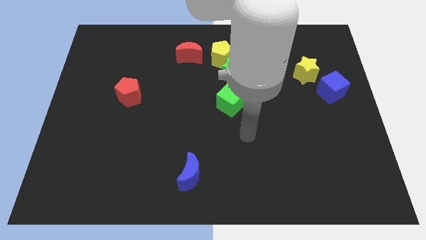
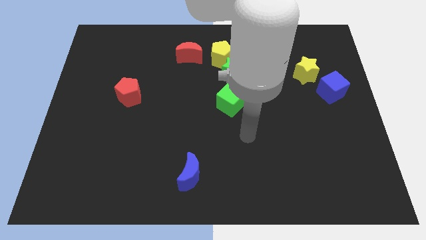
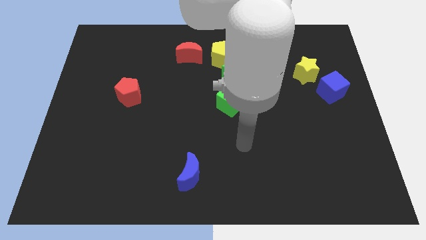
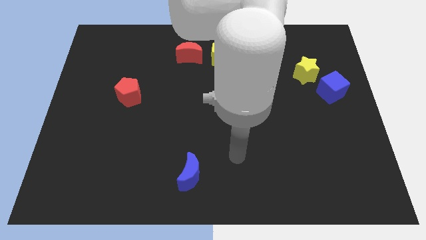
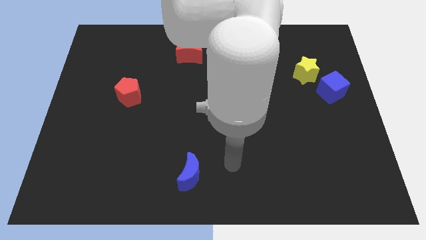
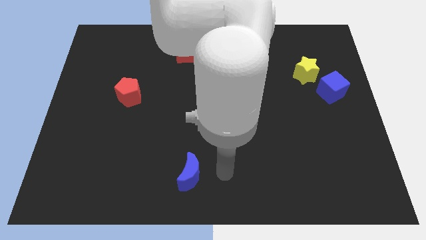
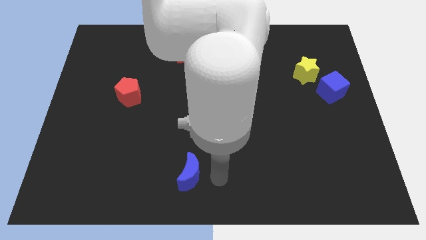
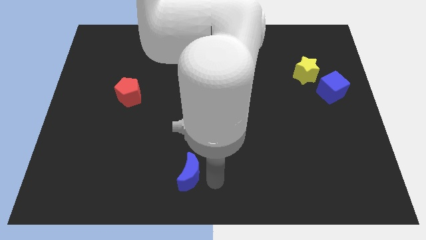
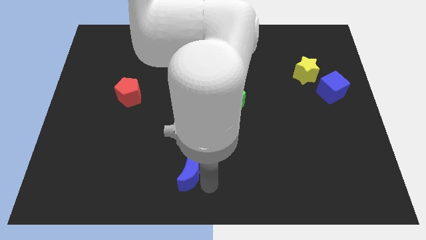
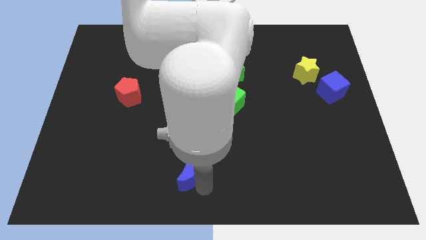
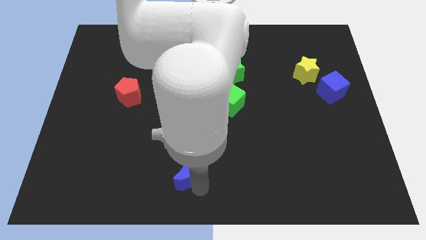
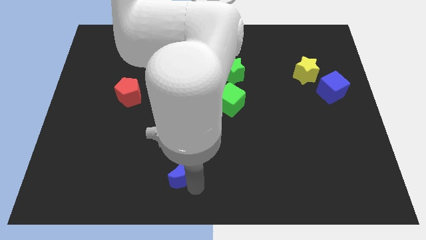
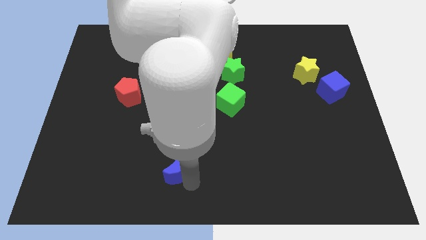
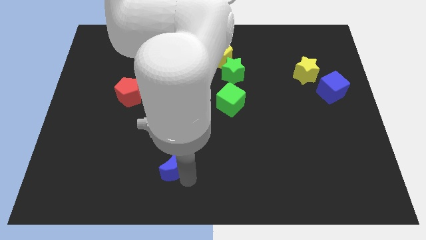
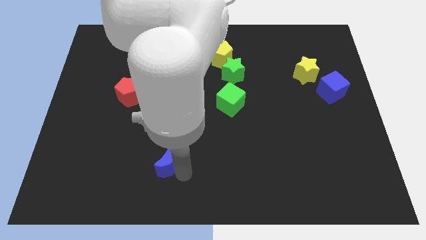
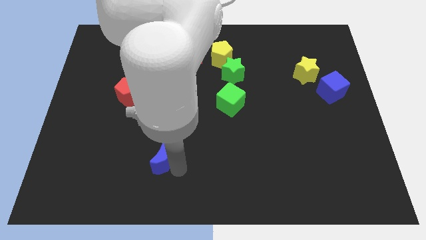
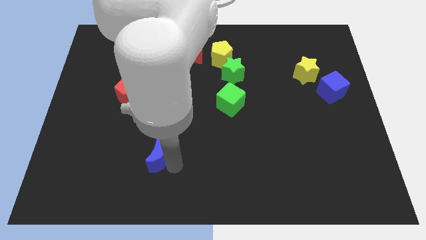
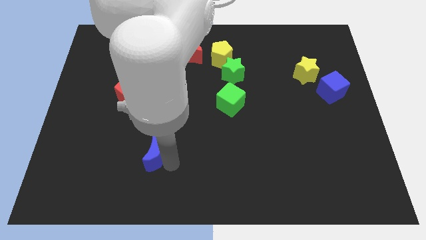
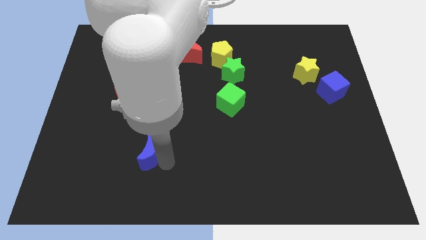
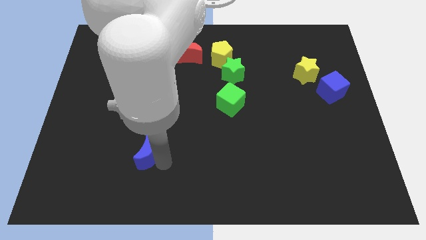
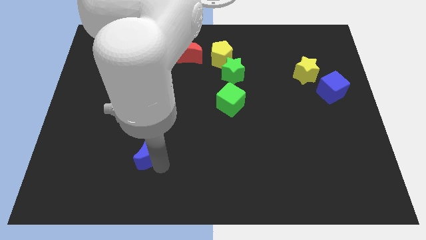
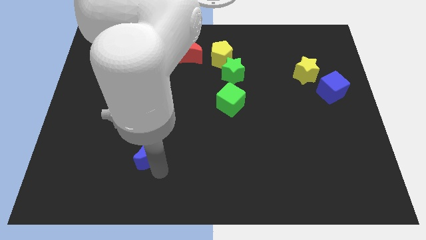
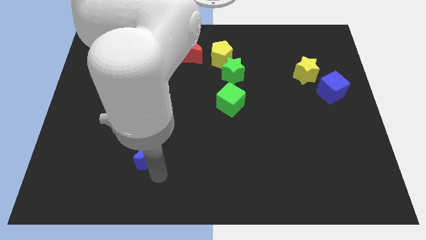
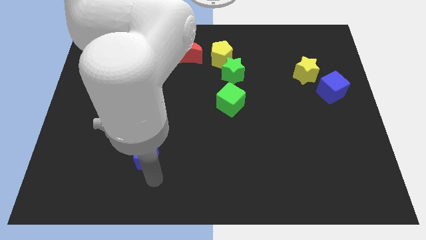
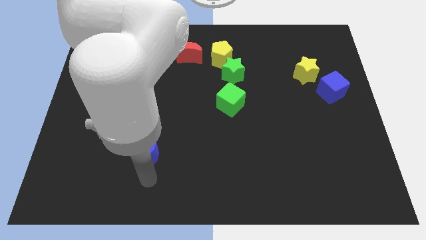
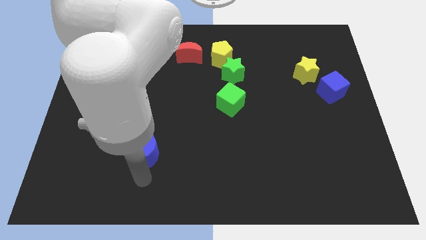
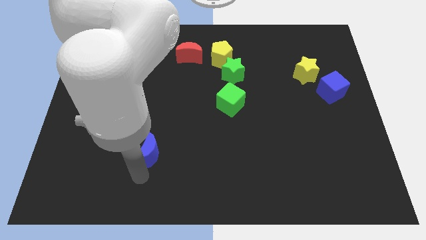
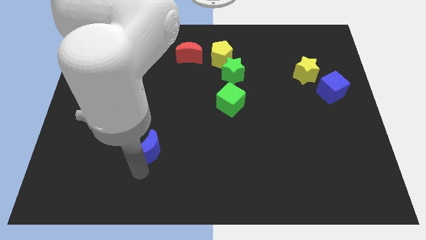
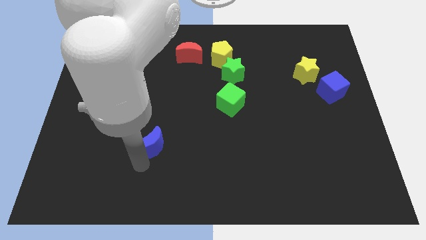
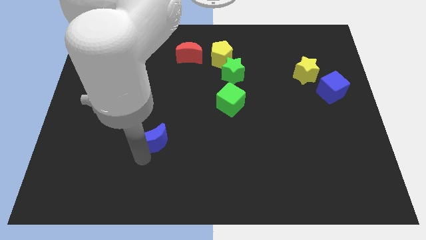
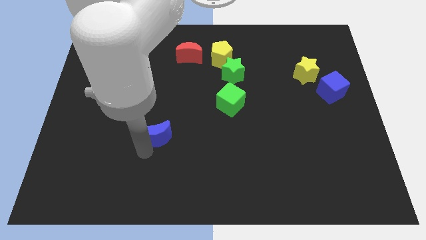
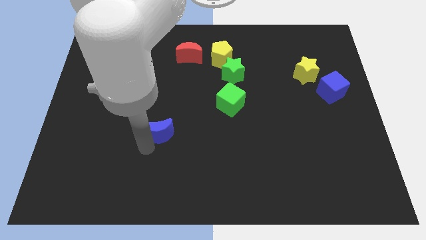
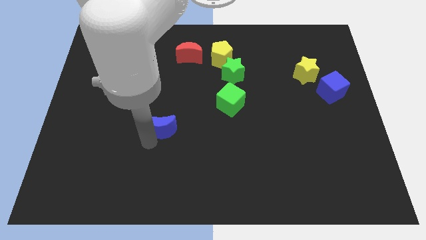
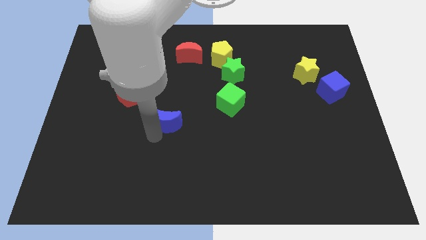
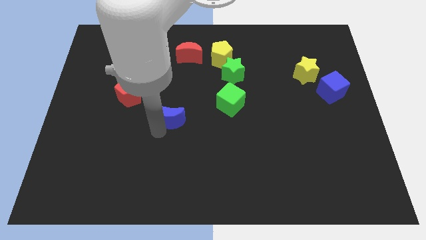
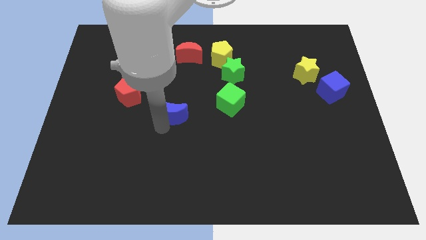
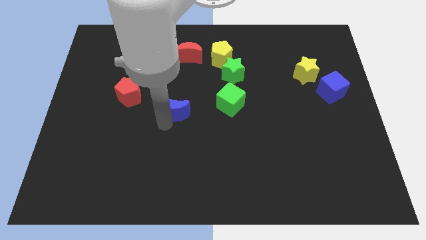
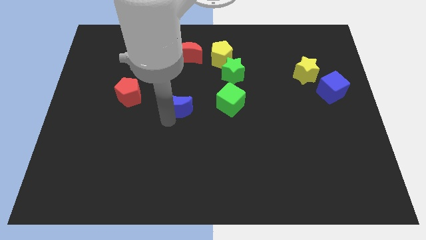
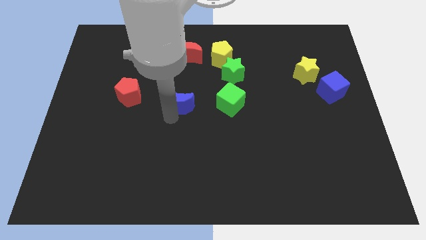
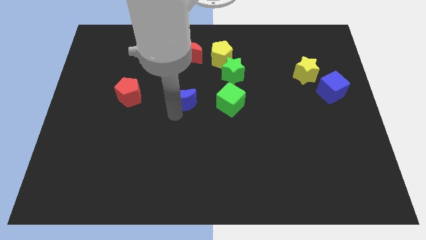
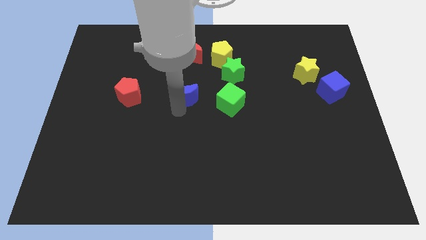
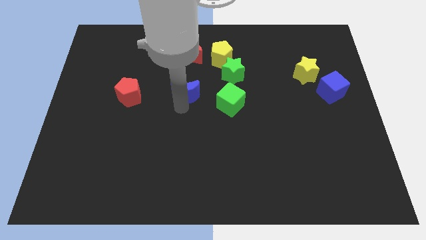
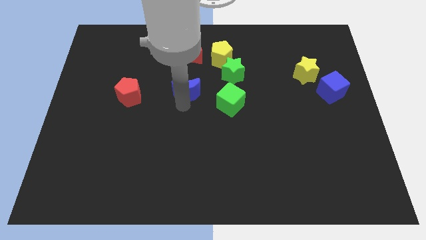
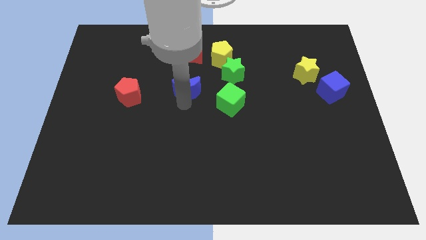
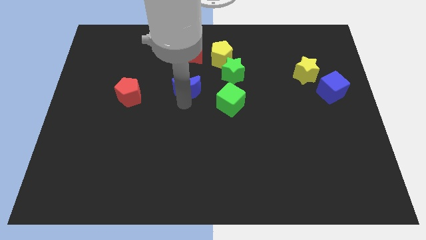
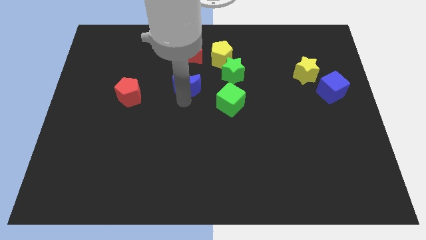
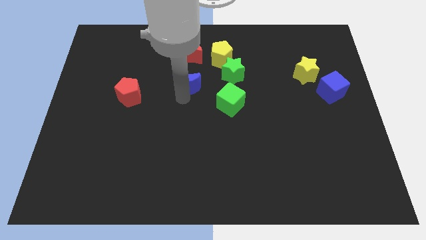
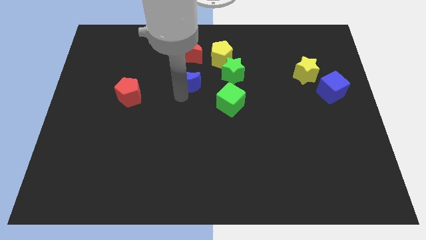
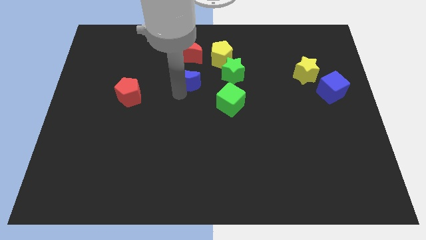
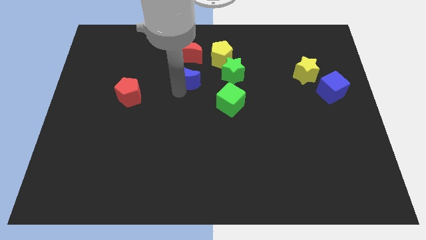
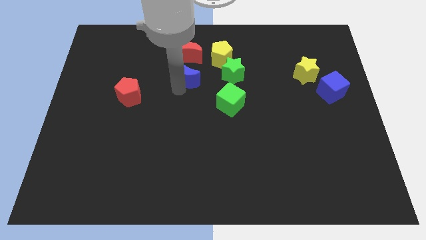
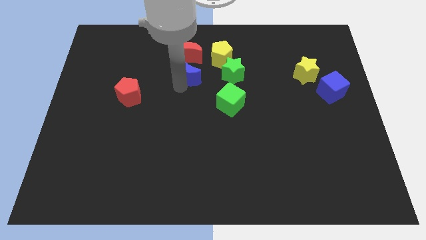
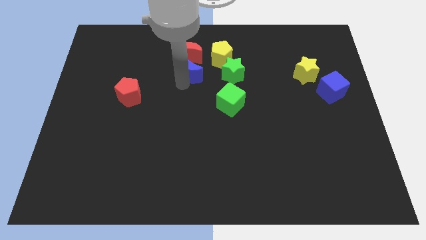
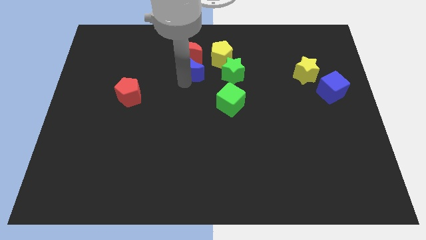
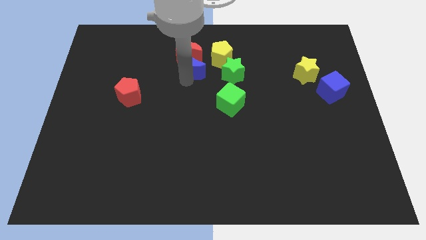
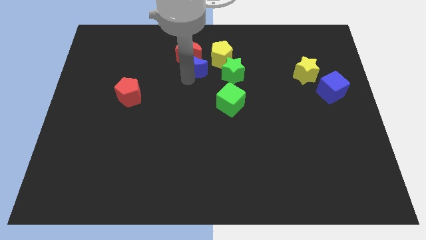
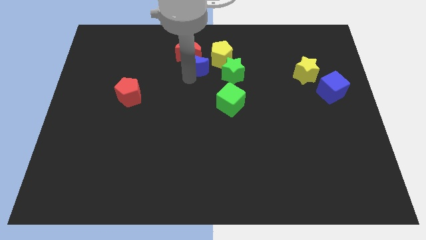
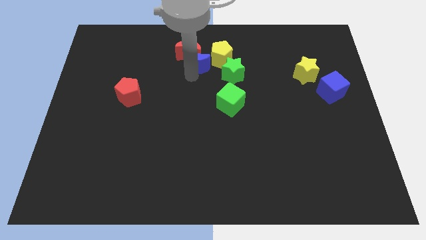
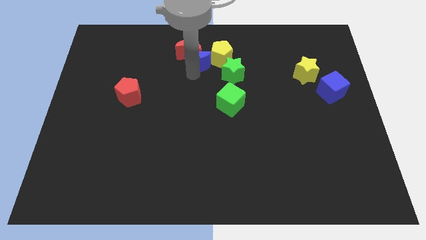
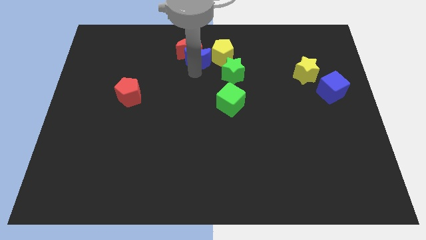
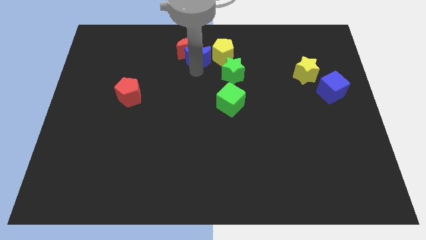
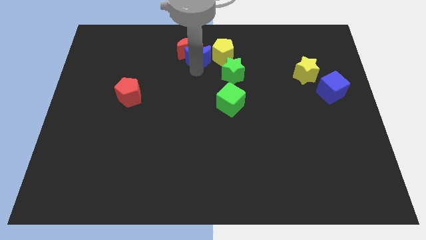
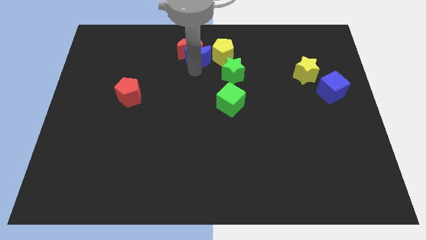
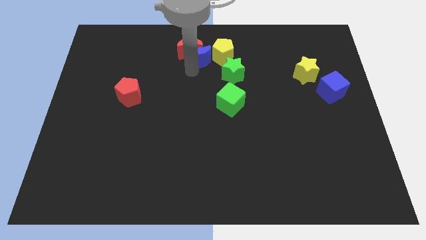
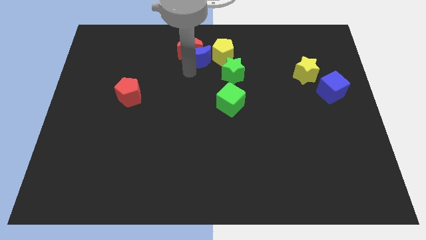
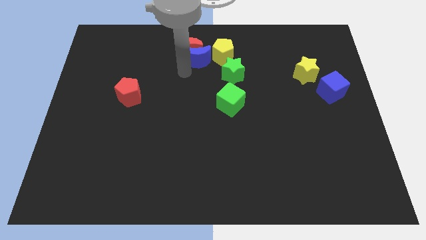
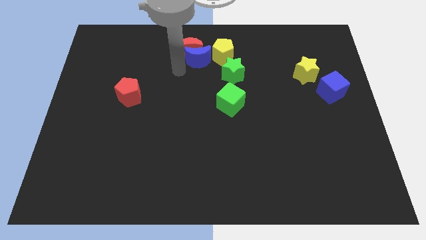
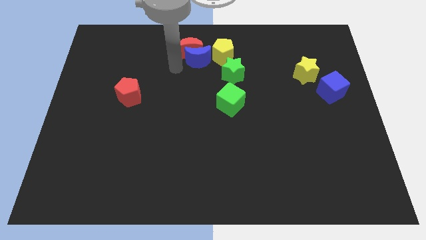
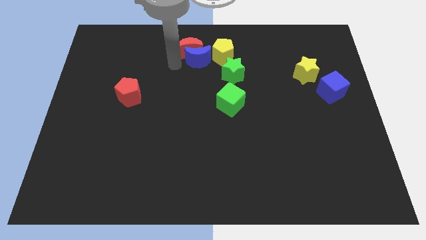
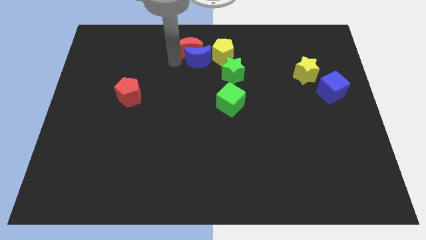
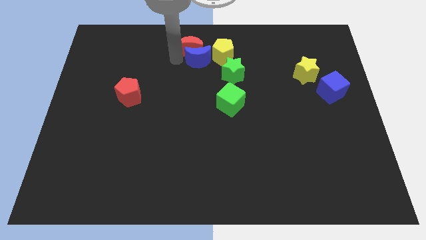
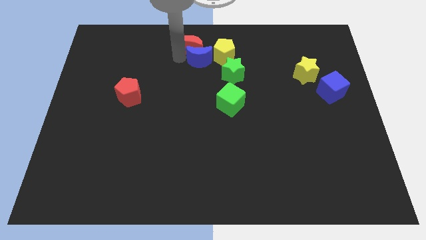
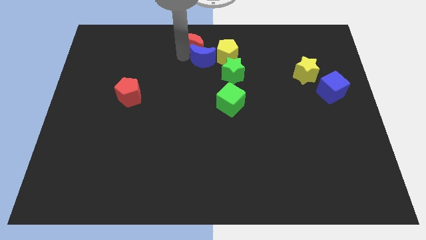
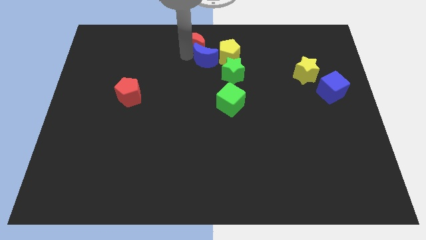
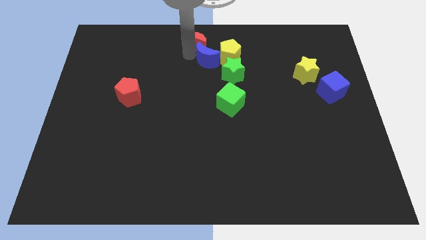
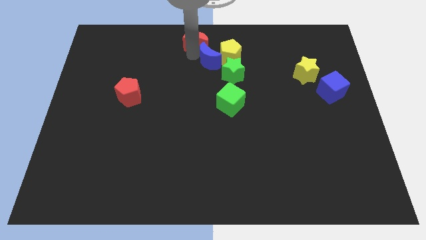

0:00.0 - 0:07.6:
push the blue moon towards the yellow pentagon

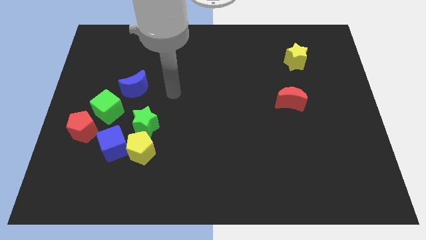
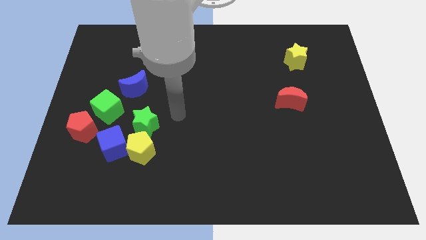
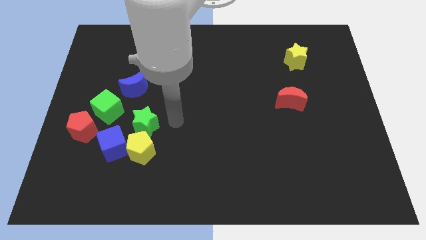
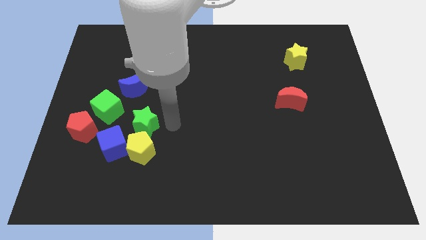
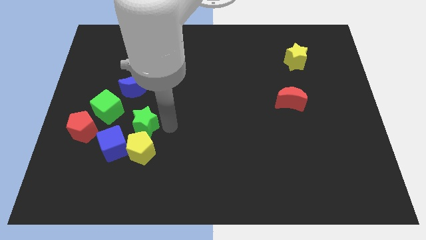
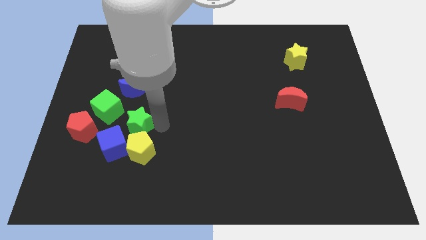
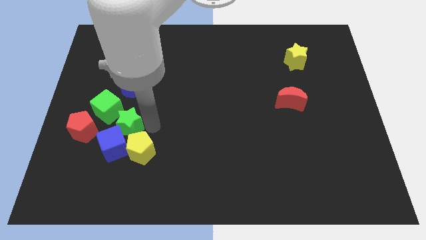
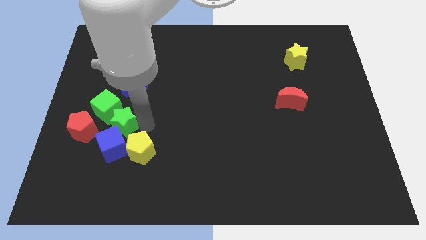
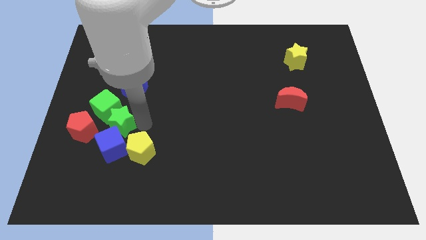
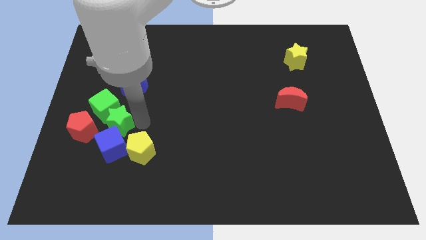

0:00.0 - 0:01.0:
put the green star next to the green cube
